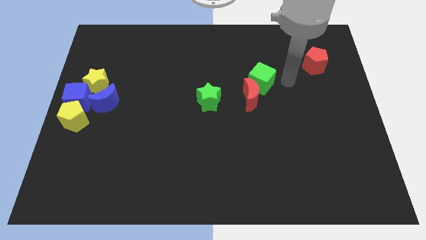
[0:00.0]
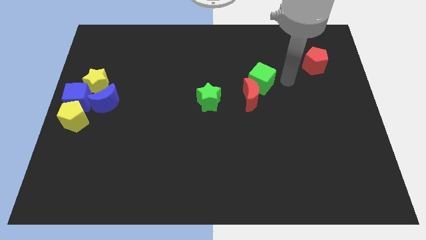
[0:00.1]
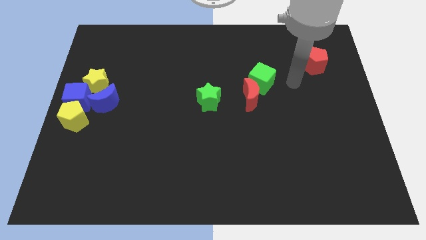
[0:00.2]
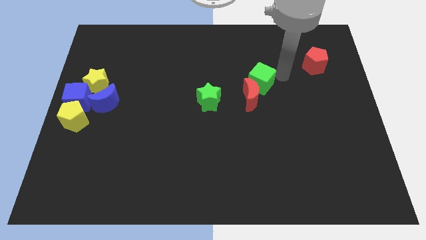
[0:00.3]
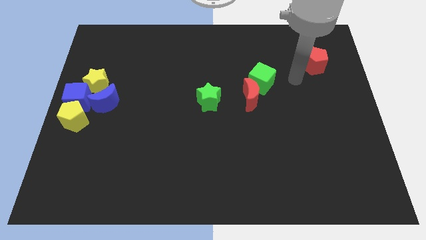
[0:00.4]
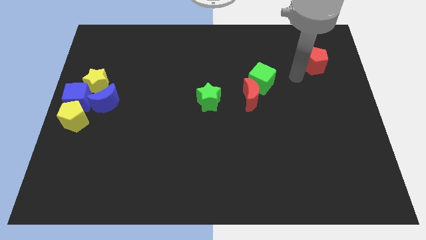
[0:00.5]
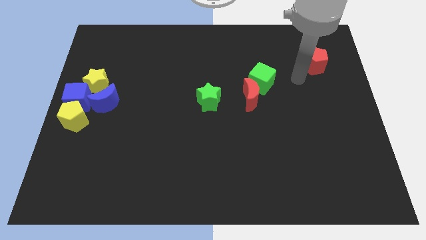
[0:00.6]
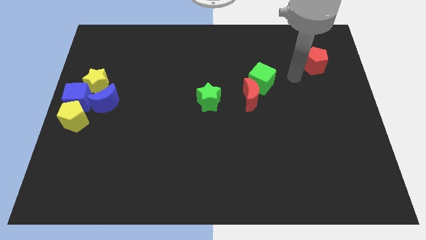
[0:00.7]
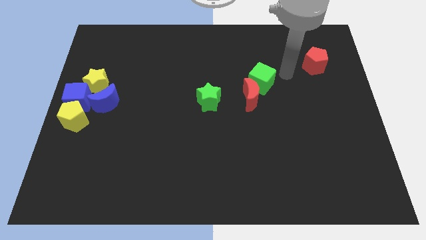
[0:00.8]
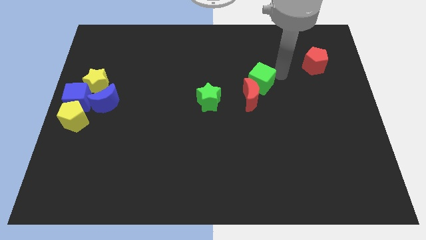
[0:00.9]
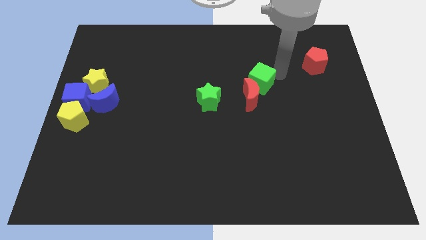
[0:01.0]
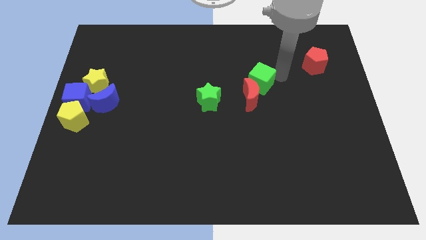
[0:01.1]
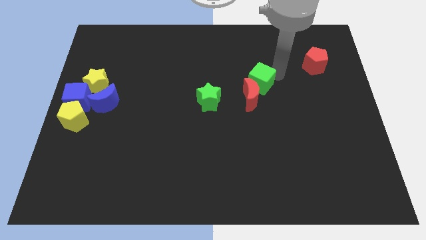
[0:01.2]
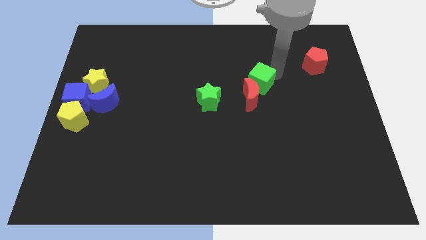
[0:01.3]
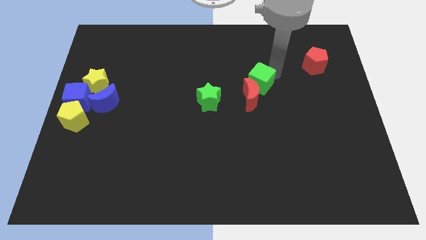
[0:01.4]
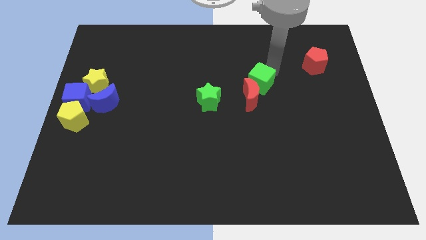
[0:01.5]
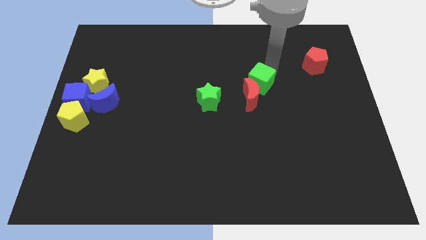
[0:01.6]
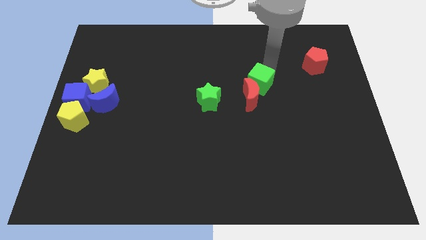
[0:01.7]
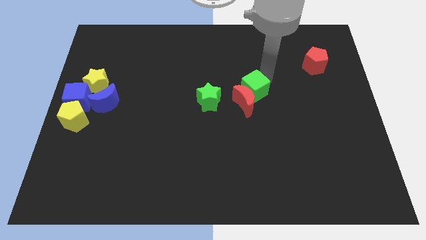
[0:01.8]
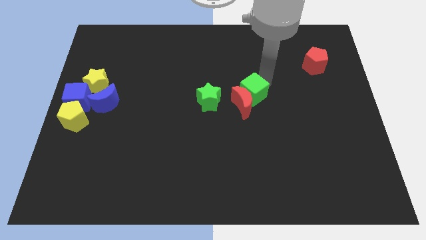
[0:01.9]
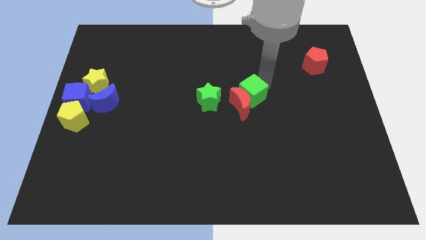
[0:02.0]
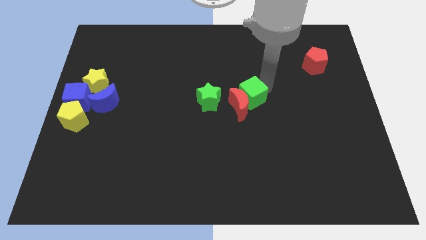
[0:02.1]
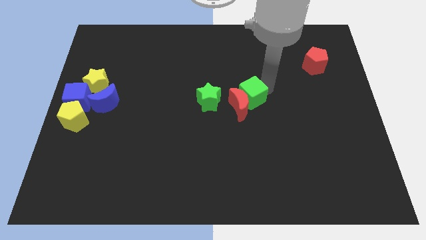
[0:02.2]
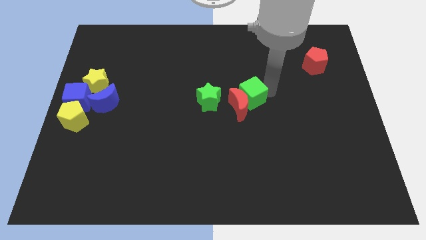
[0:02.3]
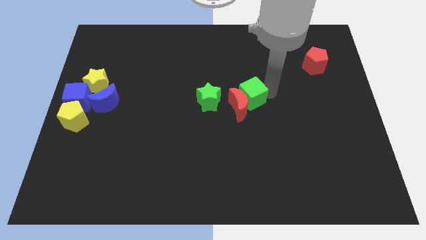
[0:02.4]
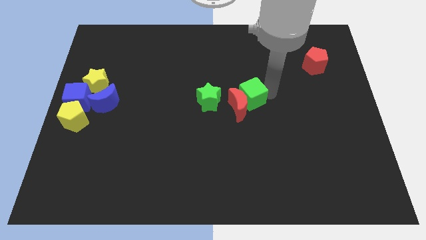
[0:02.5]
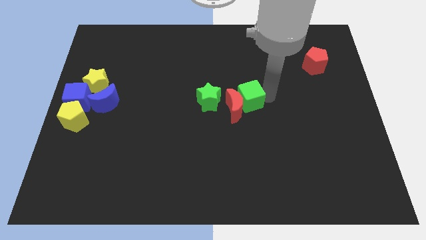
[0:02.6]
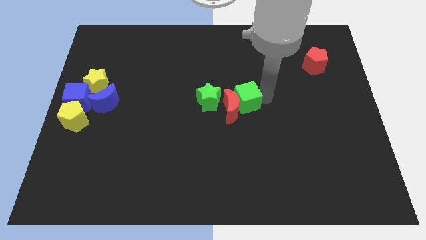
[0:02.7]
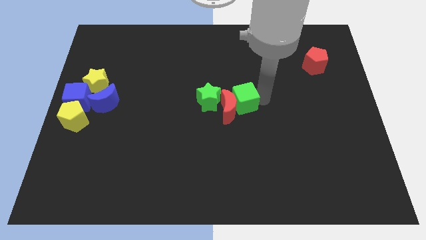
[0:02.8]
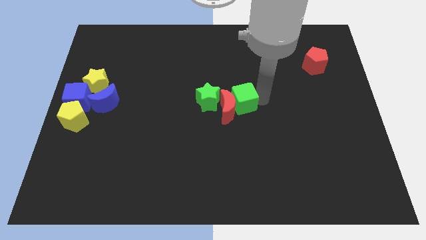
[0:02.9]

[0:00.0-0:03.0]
place the green cube and red moon at the center of the board

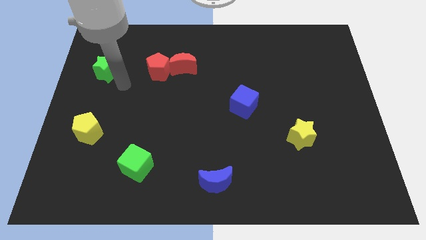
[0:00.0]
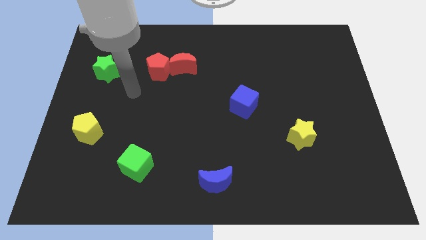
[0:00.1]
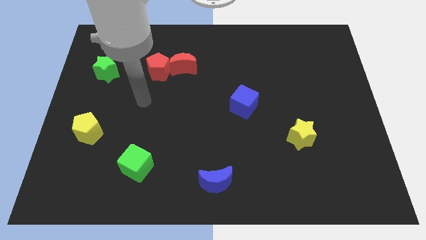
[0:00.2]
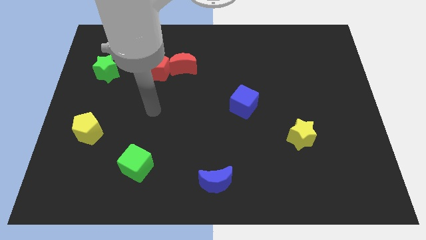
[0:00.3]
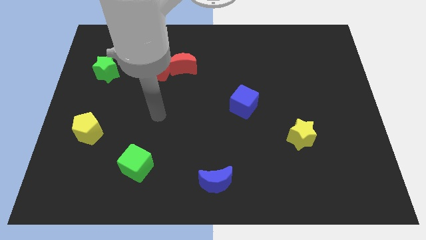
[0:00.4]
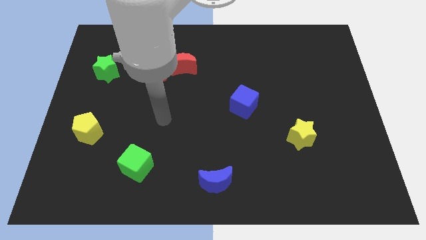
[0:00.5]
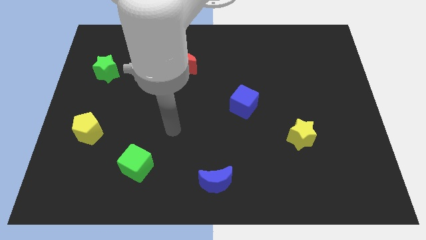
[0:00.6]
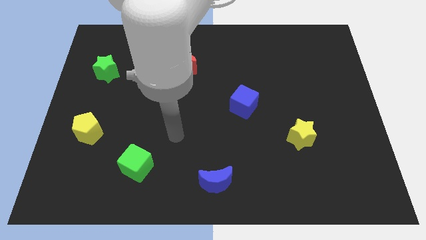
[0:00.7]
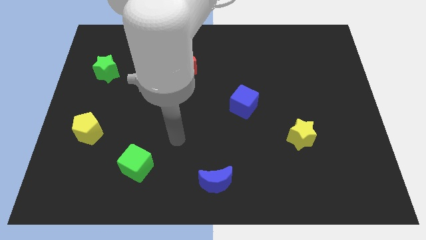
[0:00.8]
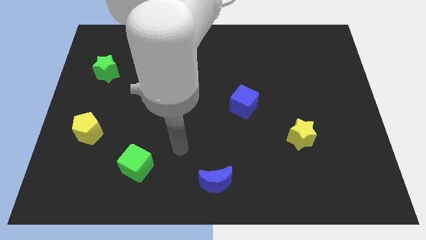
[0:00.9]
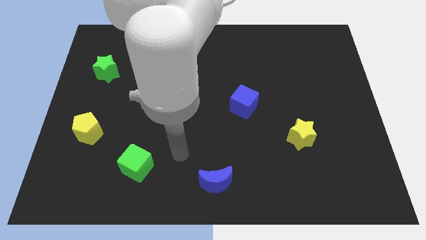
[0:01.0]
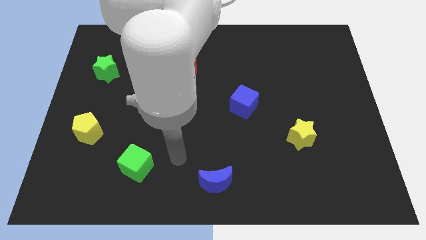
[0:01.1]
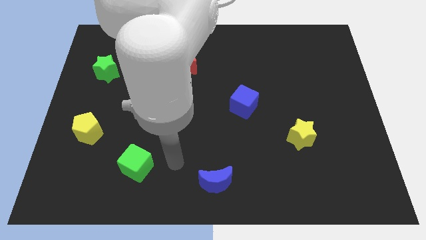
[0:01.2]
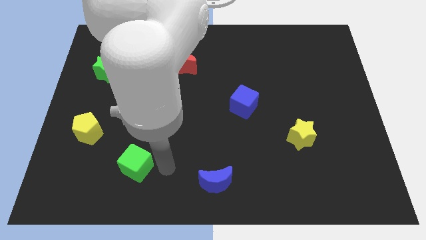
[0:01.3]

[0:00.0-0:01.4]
move your arm to the right of the green cube

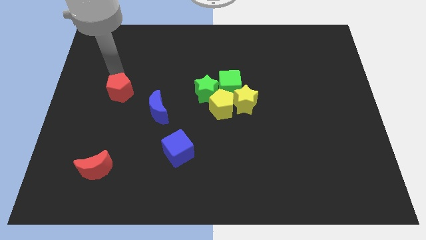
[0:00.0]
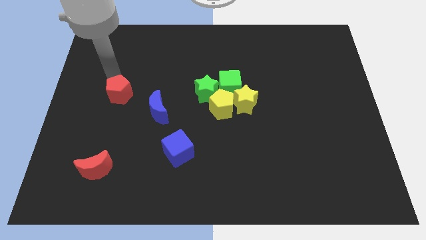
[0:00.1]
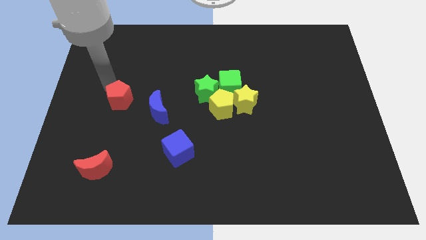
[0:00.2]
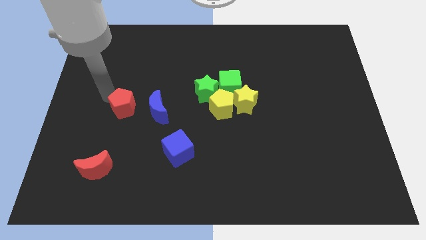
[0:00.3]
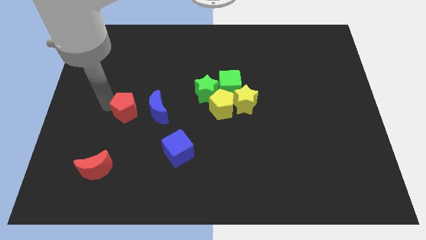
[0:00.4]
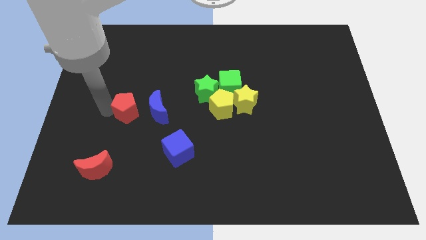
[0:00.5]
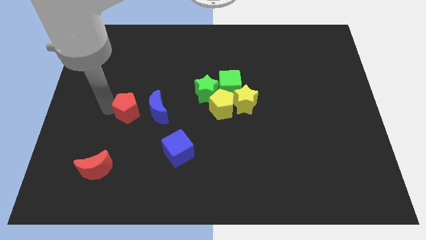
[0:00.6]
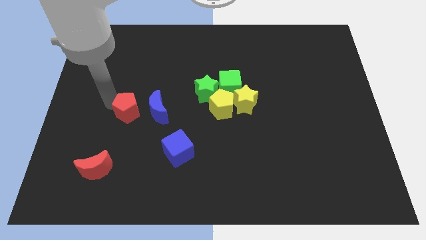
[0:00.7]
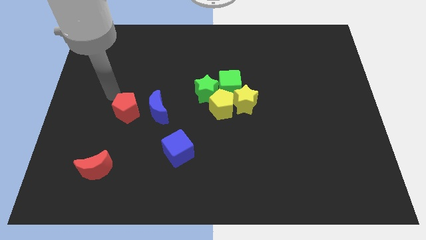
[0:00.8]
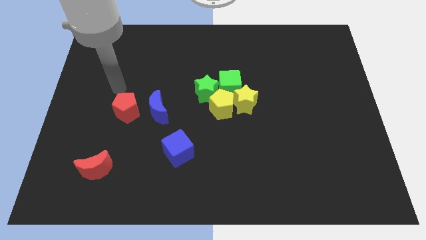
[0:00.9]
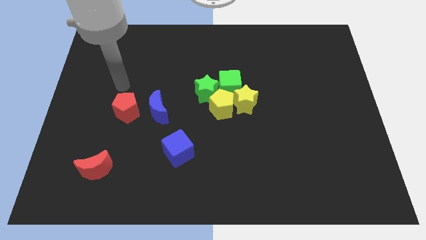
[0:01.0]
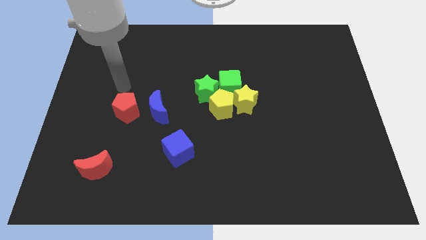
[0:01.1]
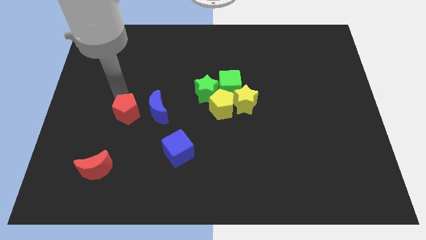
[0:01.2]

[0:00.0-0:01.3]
move the red pentagon to the bottom of the board

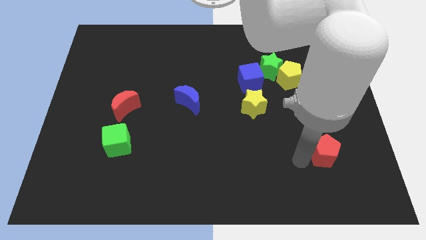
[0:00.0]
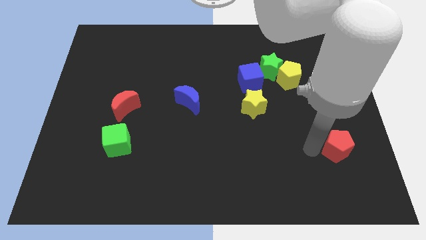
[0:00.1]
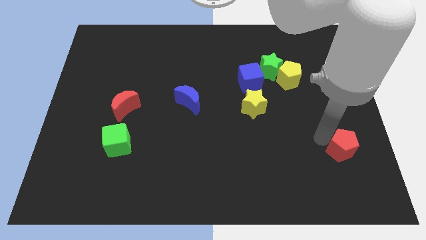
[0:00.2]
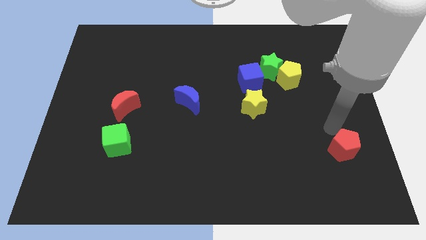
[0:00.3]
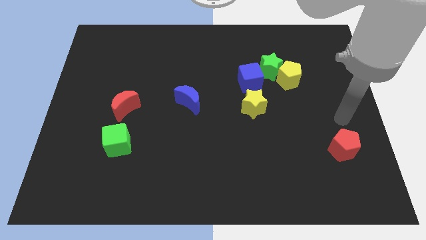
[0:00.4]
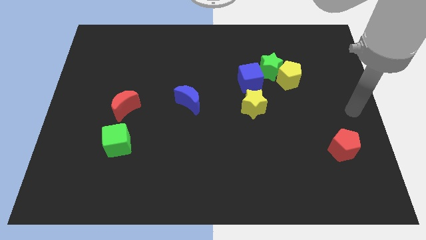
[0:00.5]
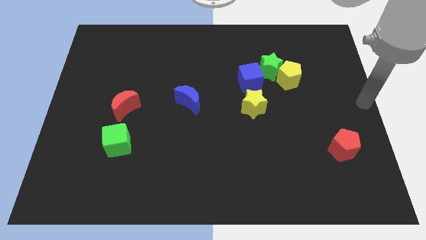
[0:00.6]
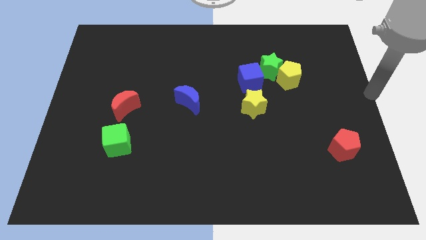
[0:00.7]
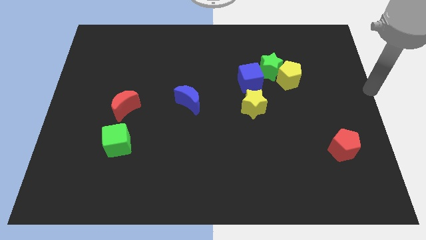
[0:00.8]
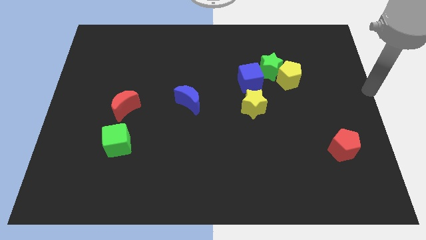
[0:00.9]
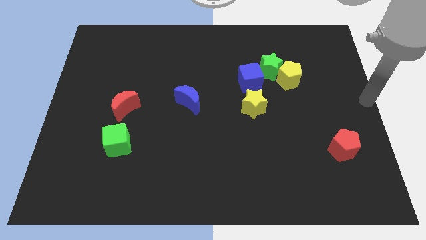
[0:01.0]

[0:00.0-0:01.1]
place your arm at the center right corner of the board

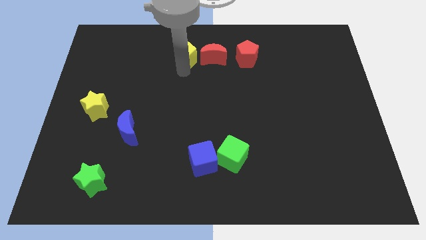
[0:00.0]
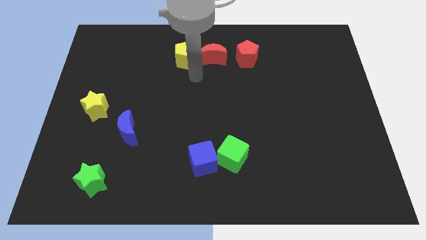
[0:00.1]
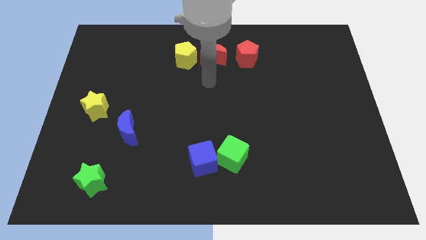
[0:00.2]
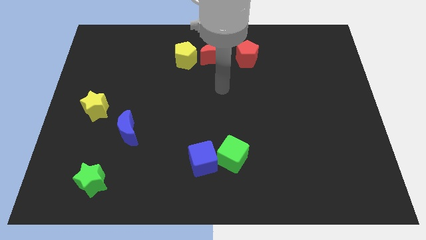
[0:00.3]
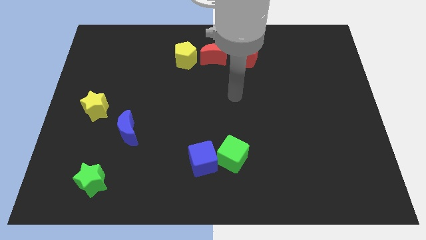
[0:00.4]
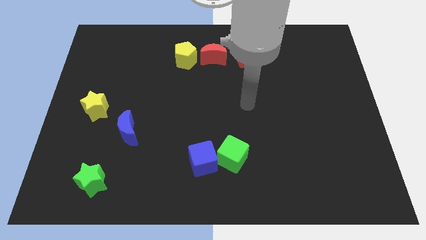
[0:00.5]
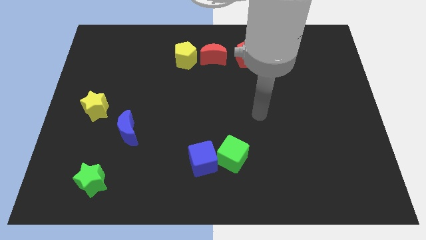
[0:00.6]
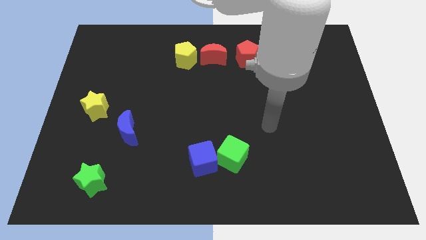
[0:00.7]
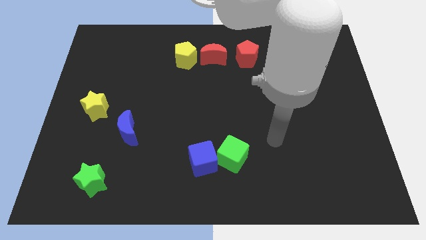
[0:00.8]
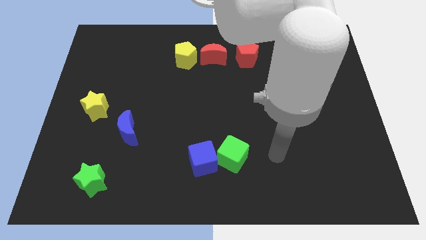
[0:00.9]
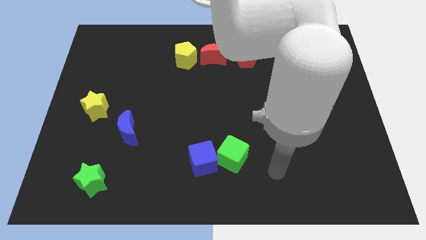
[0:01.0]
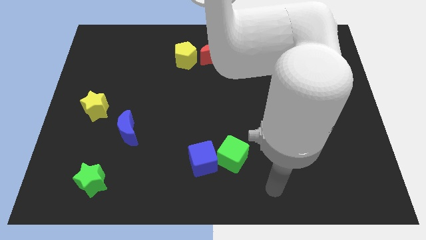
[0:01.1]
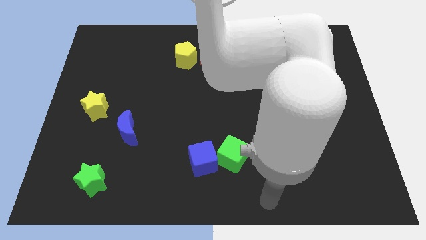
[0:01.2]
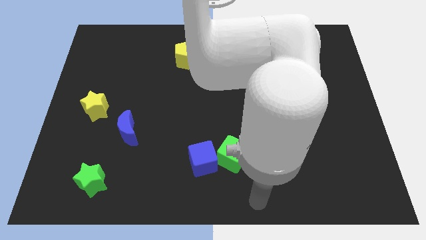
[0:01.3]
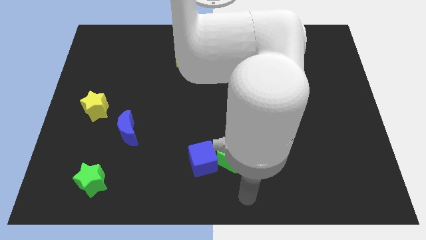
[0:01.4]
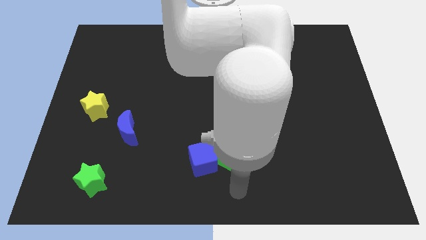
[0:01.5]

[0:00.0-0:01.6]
move the arm towards the bottom center of the board

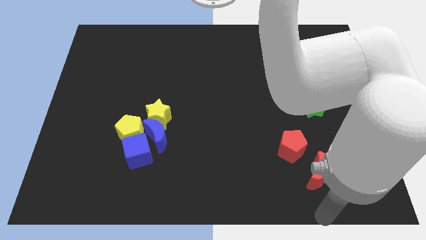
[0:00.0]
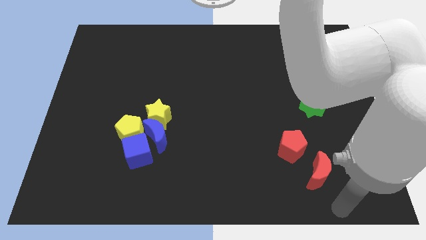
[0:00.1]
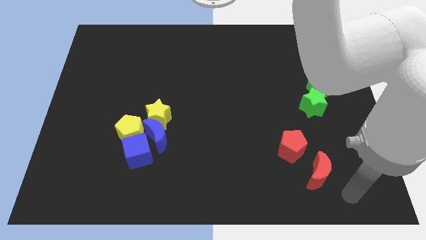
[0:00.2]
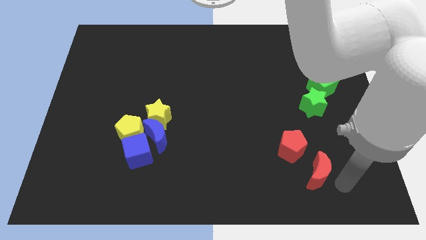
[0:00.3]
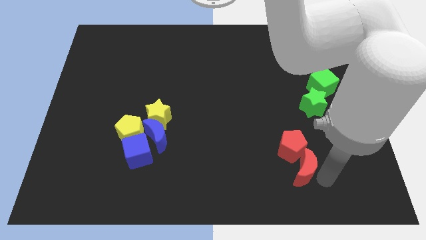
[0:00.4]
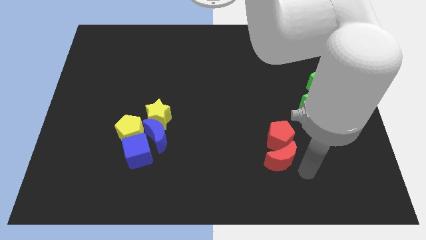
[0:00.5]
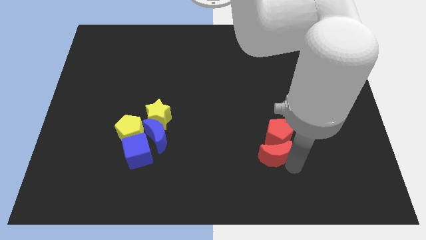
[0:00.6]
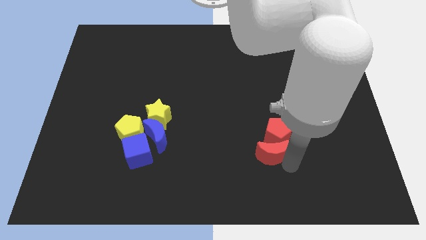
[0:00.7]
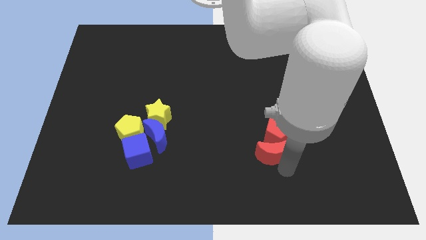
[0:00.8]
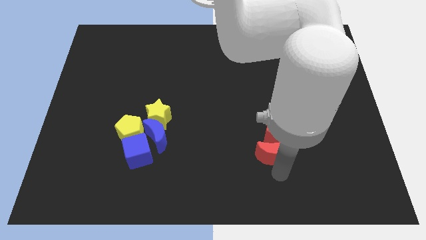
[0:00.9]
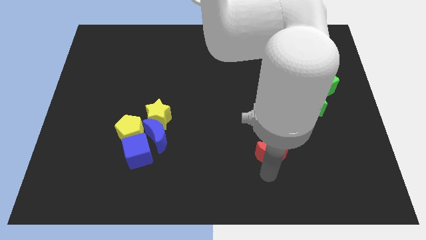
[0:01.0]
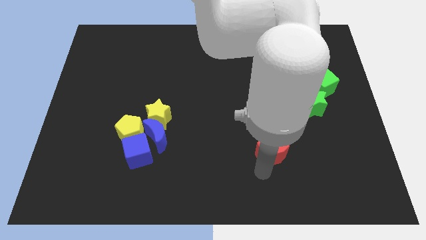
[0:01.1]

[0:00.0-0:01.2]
place the red crescent below the red pentagon
